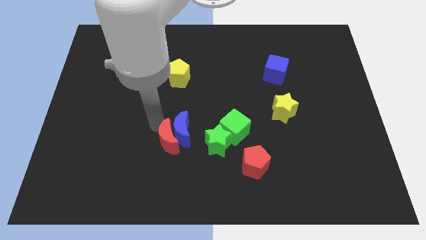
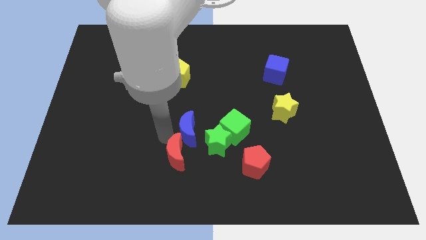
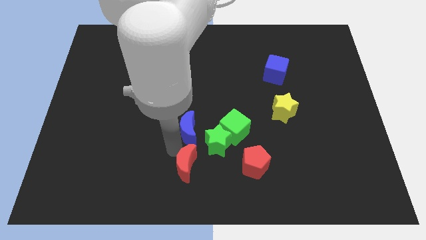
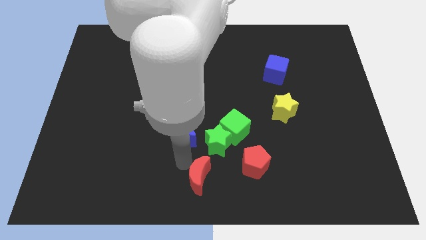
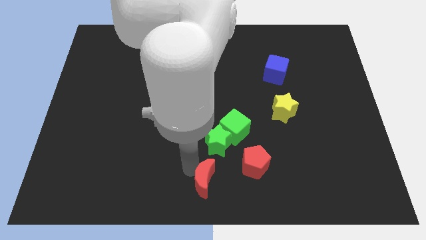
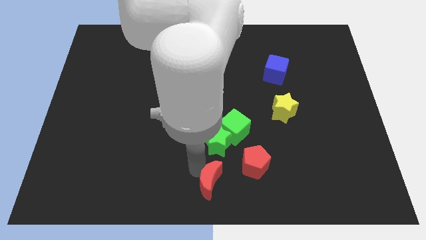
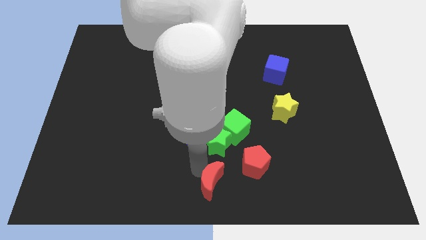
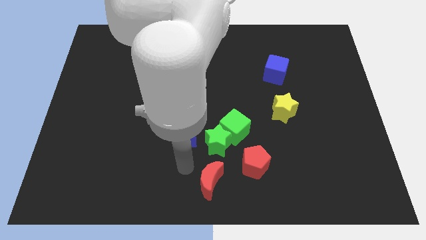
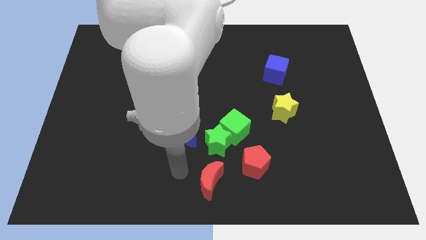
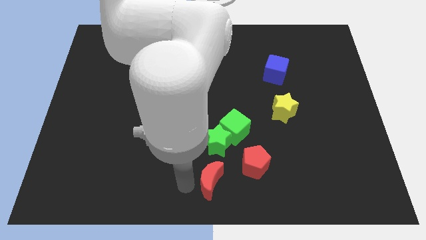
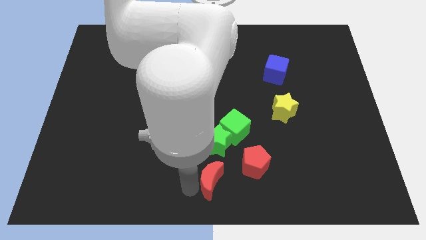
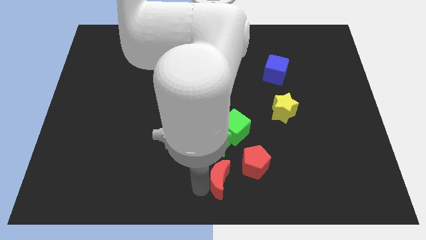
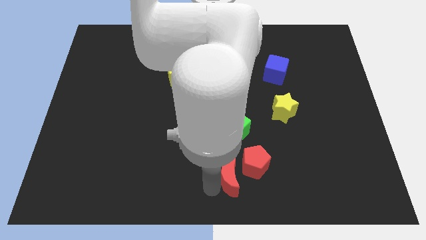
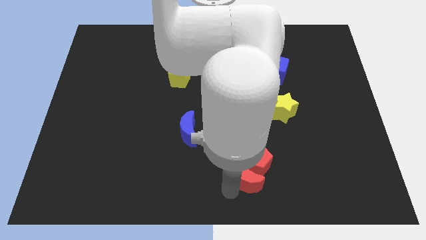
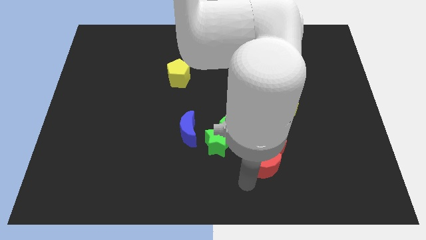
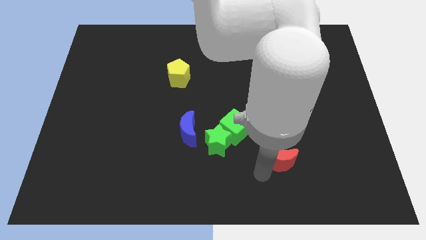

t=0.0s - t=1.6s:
move the red moon to the bottom side of the red pentagon

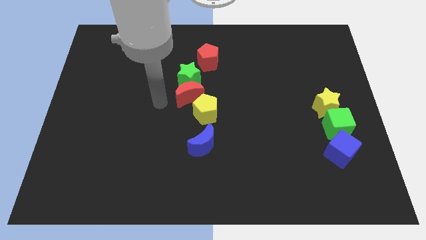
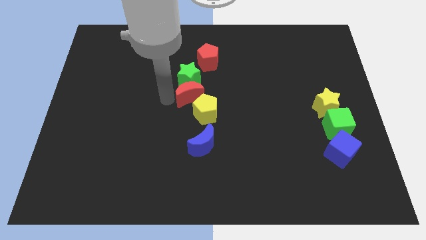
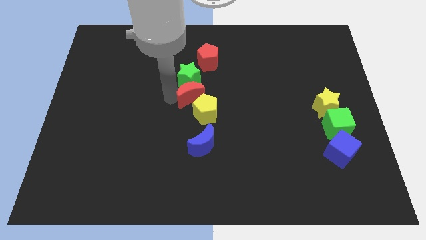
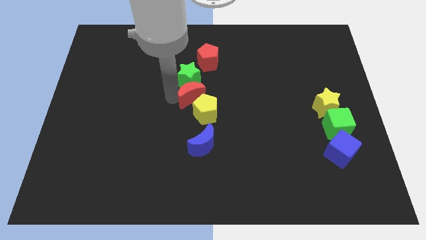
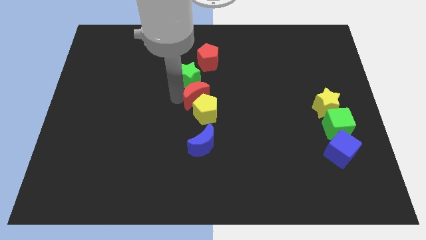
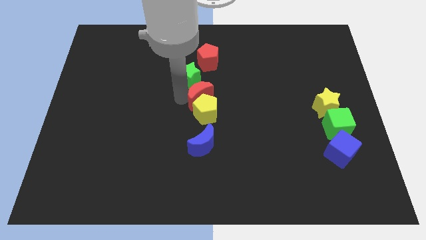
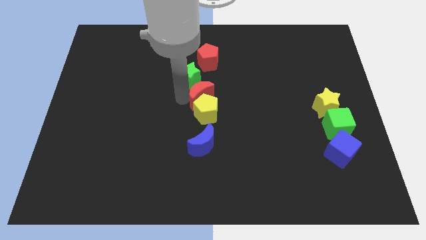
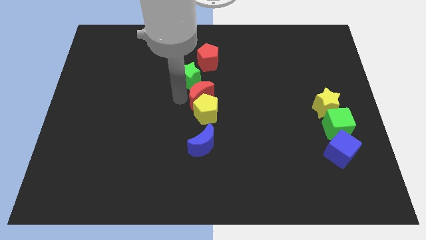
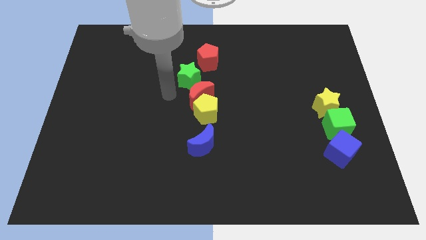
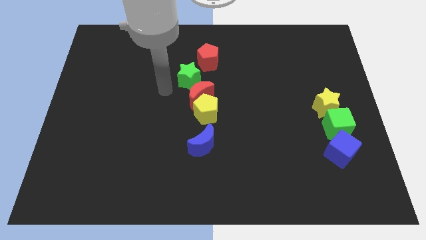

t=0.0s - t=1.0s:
push the red crescent in between the yellow pentagon and the green star

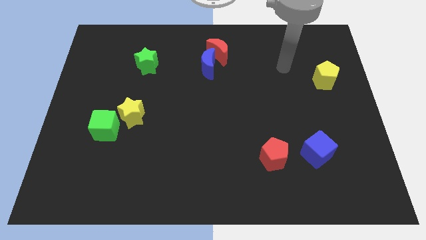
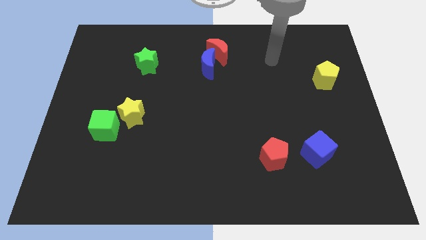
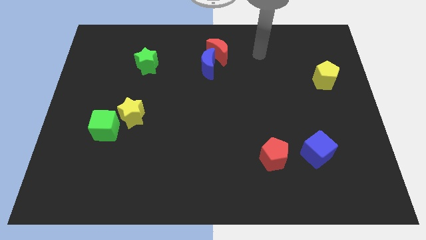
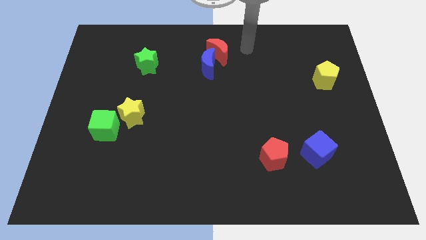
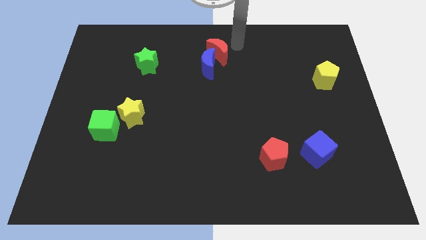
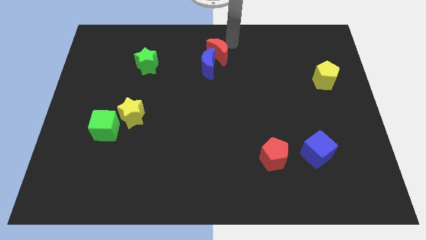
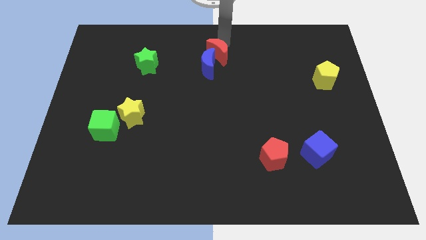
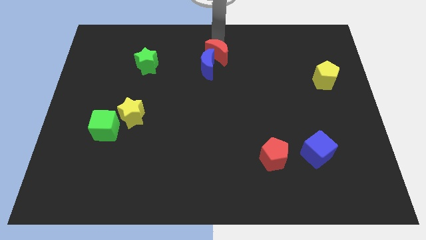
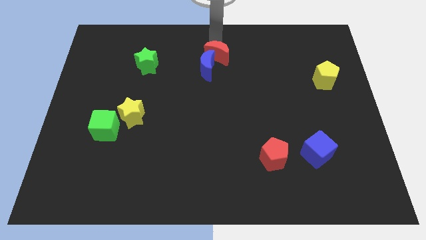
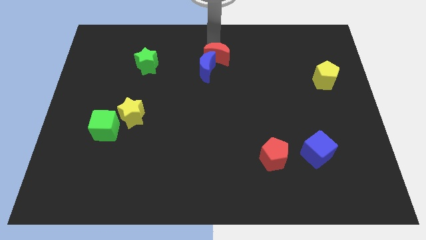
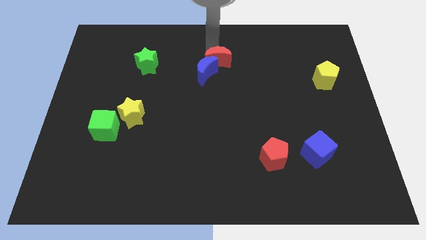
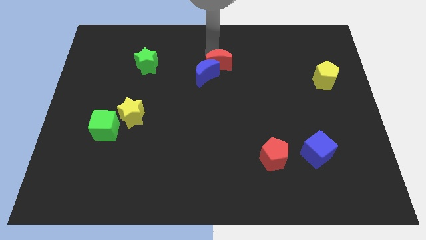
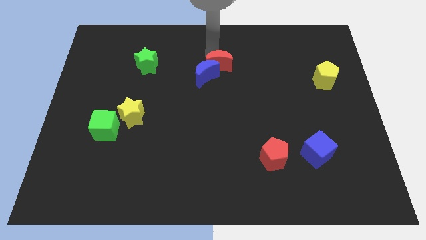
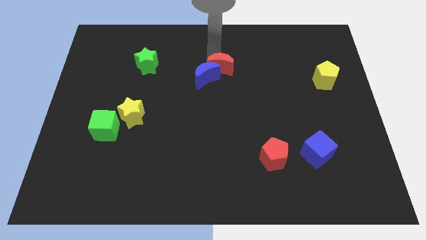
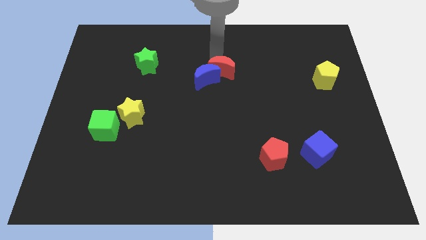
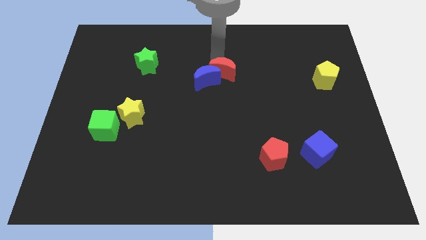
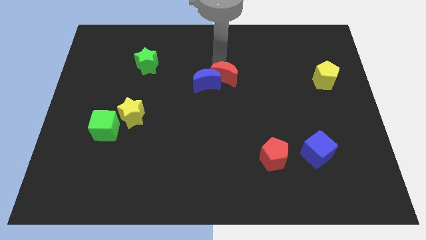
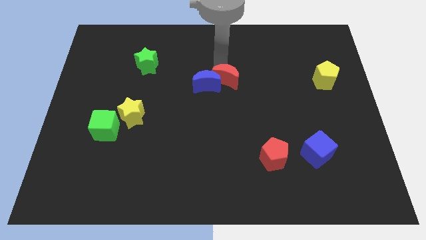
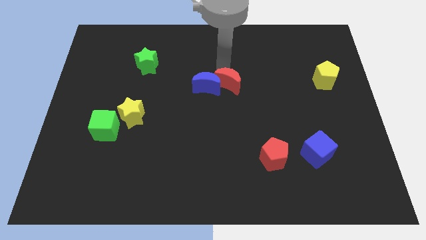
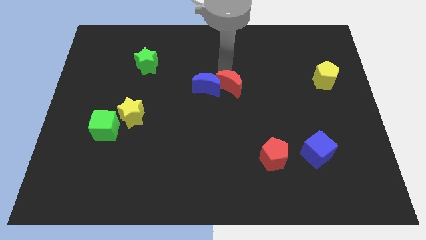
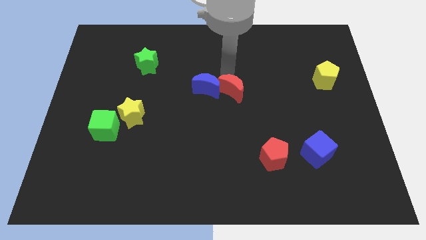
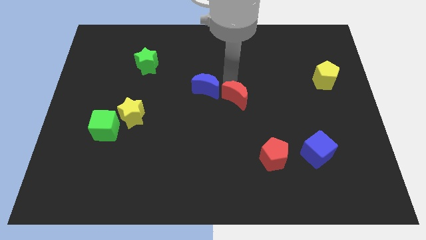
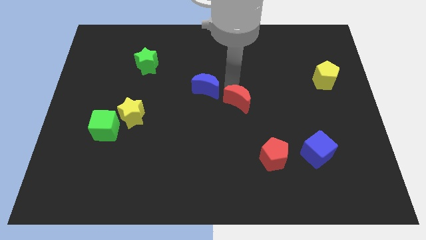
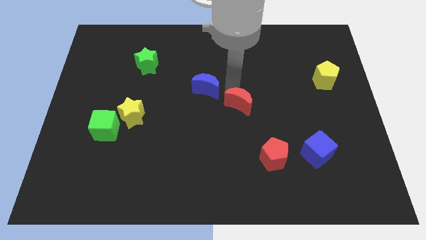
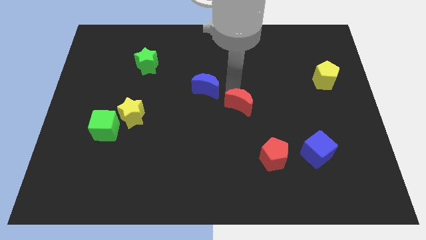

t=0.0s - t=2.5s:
push the red moon into the blue moon

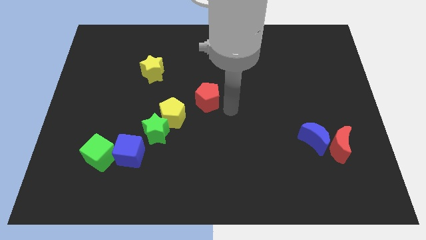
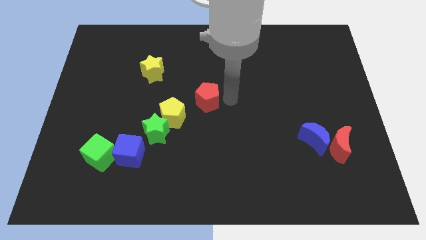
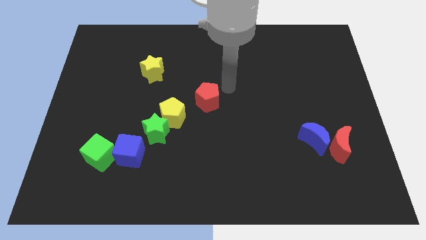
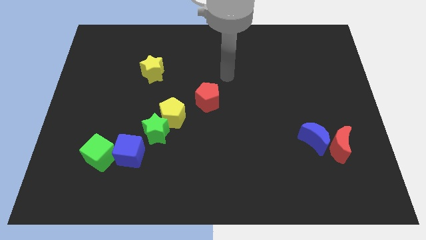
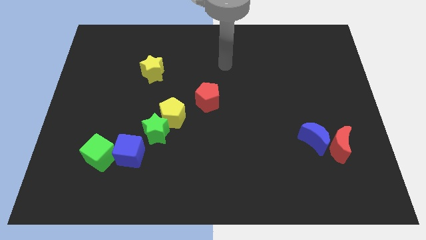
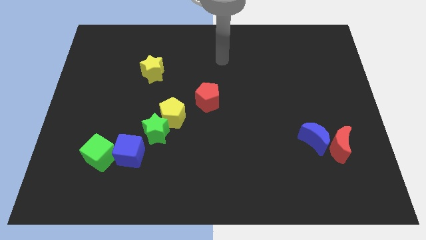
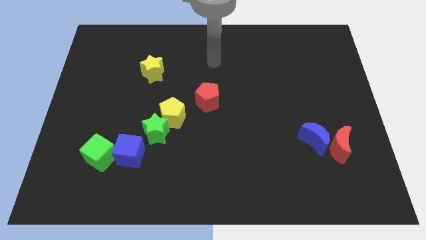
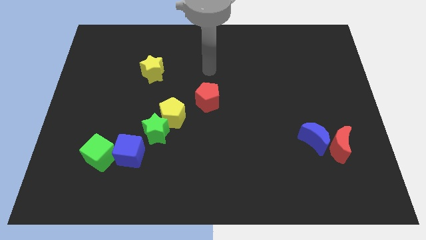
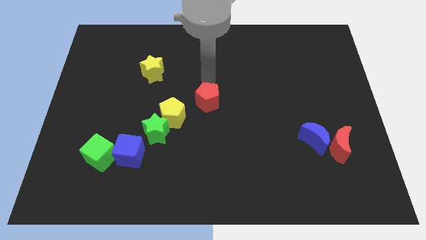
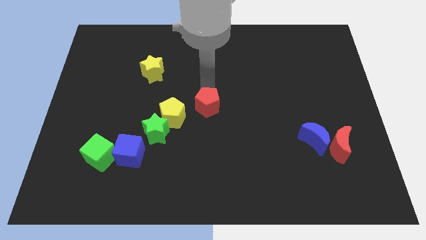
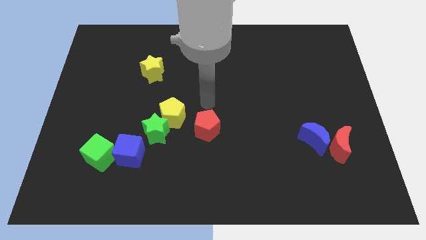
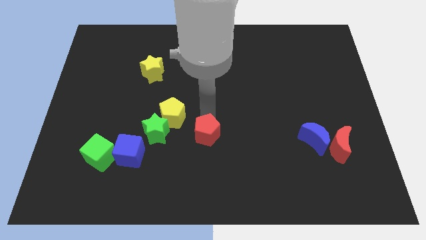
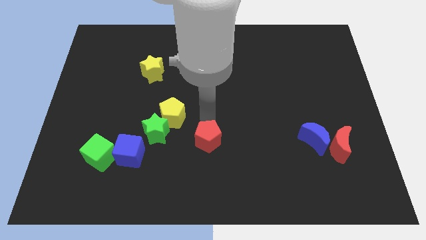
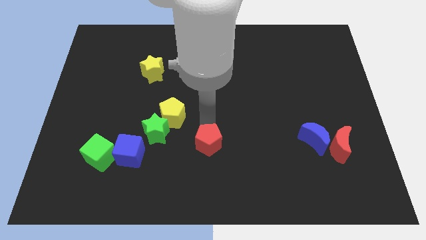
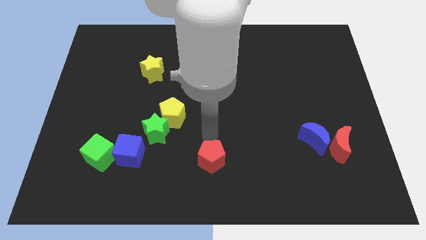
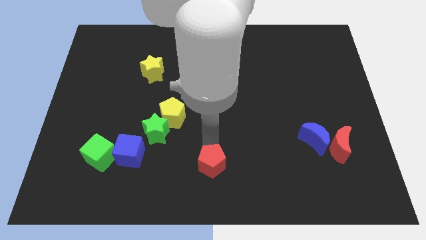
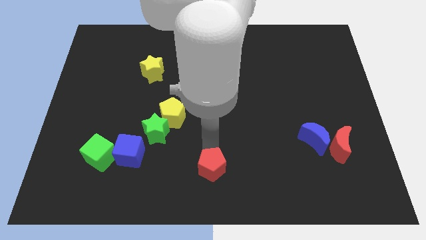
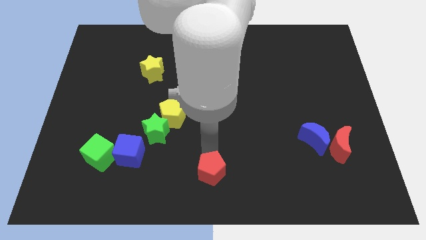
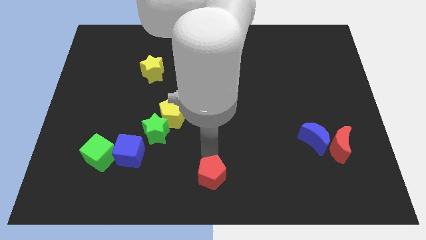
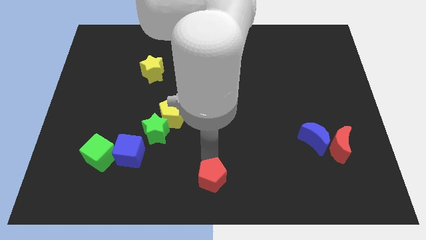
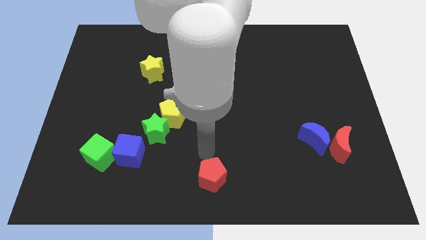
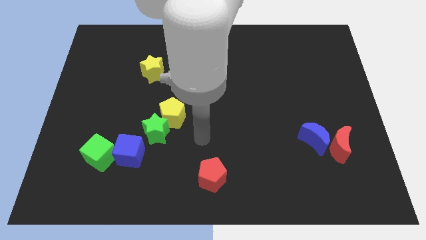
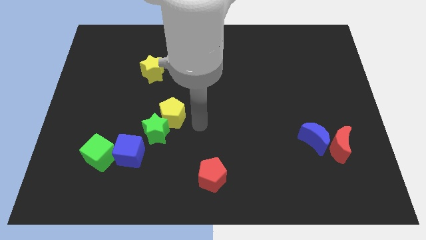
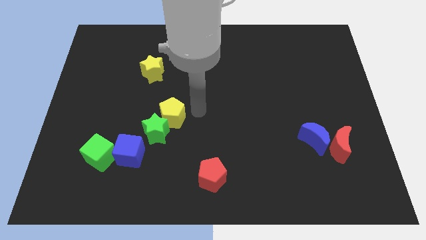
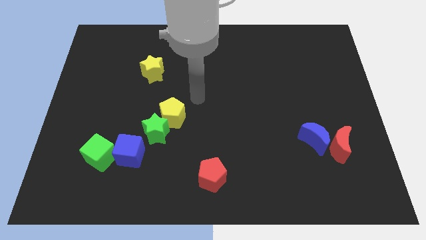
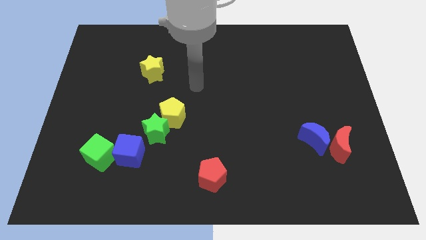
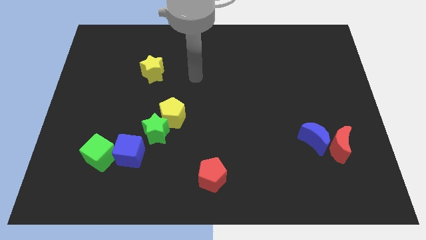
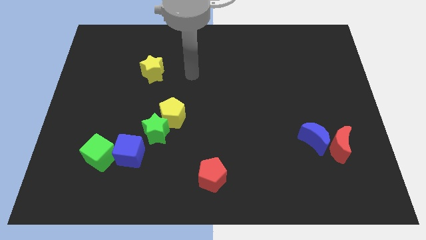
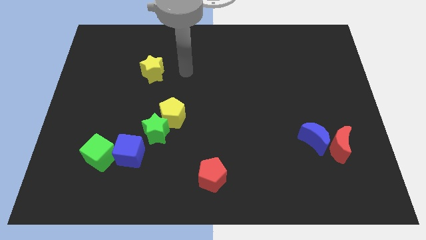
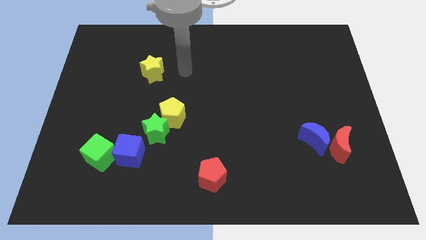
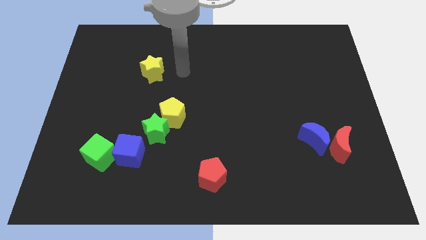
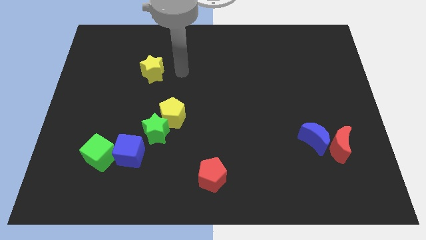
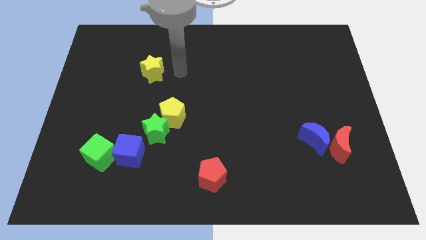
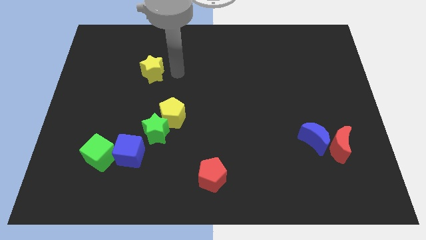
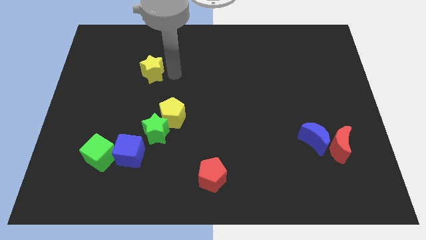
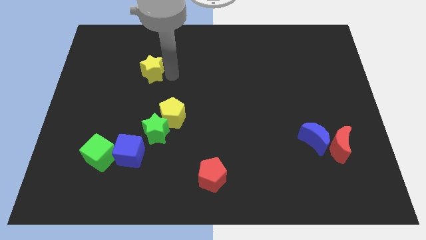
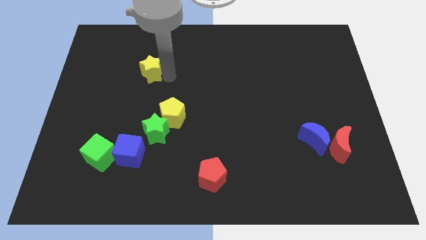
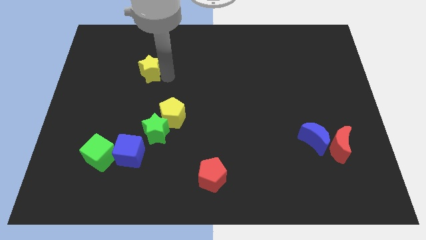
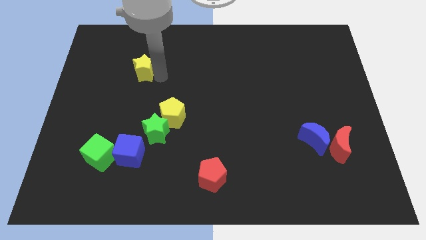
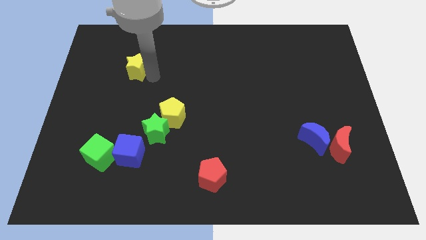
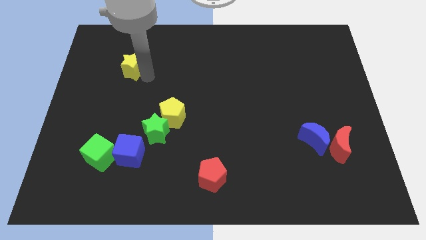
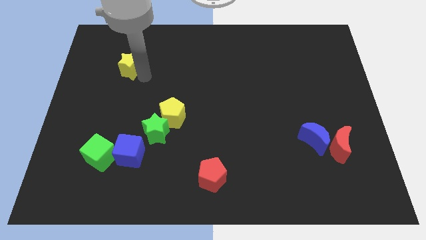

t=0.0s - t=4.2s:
move the red pentagon towards the bottom centre of the board
